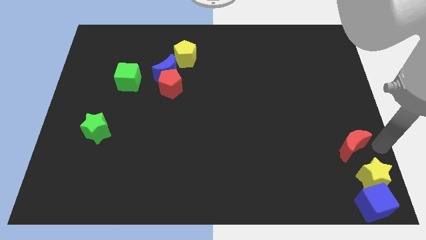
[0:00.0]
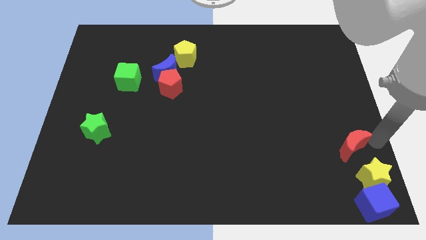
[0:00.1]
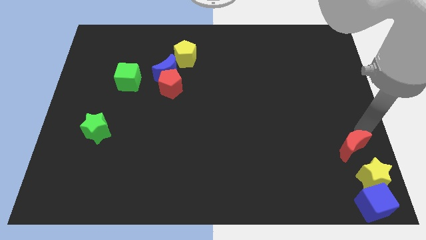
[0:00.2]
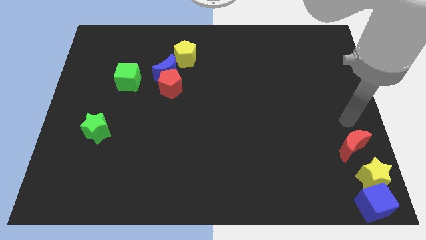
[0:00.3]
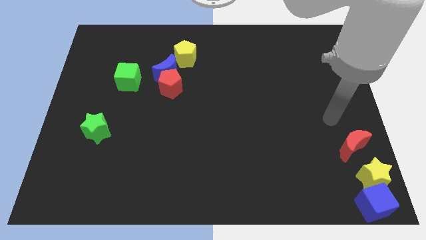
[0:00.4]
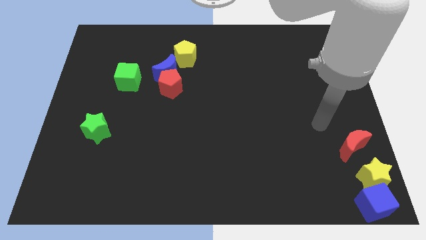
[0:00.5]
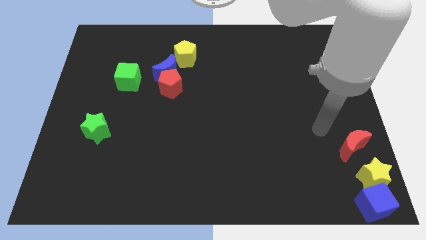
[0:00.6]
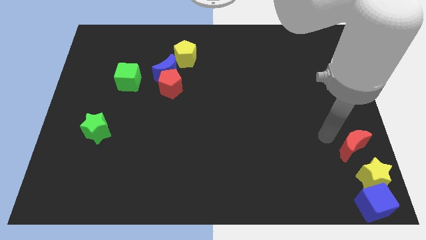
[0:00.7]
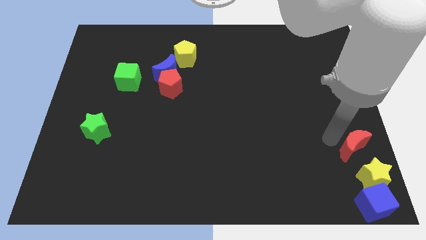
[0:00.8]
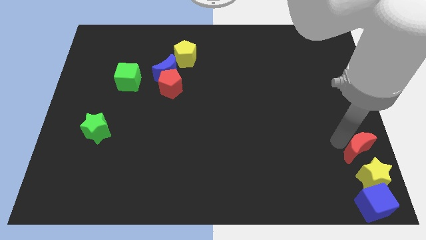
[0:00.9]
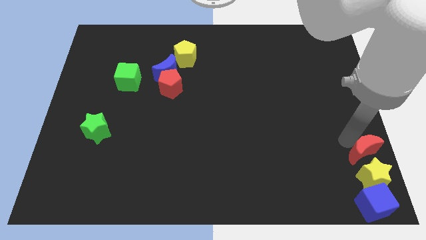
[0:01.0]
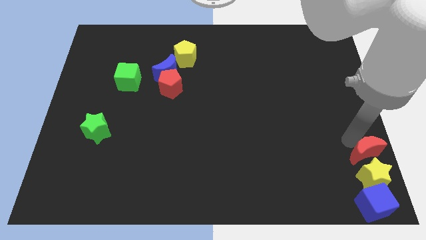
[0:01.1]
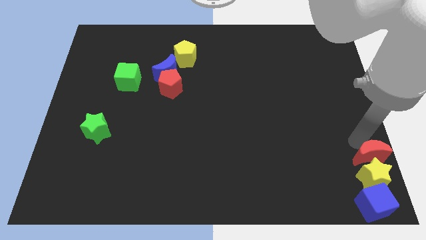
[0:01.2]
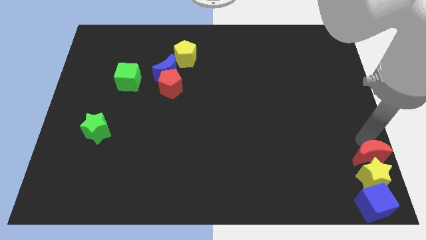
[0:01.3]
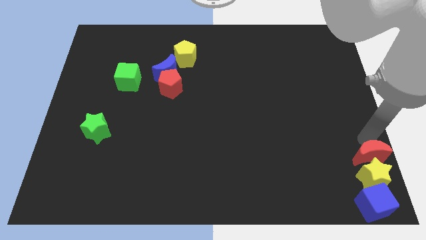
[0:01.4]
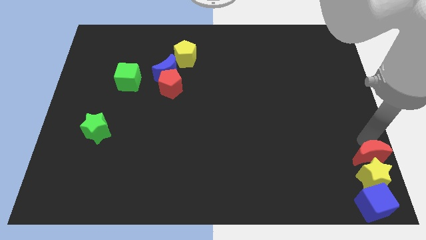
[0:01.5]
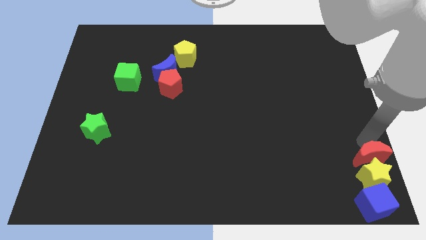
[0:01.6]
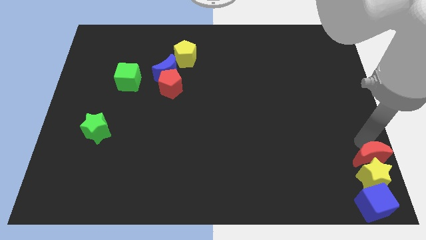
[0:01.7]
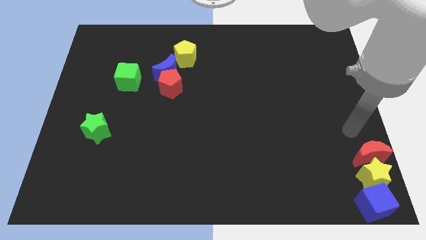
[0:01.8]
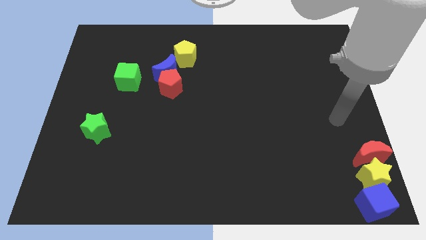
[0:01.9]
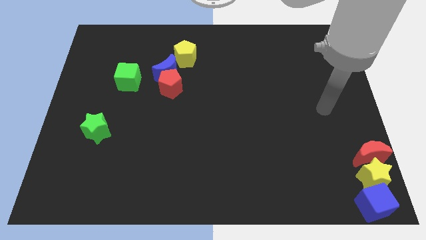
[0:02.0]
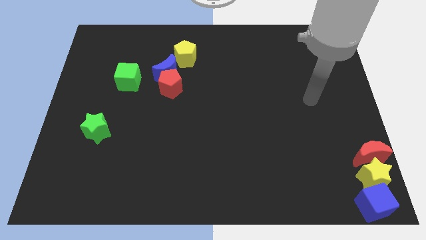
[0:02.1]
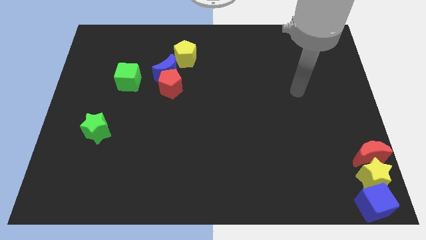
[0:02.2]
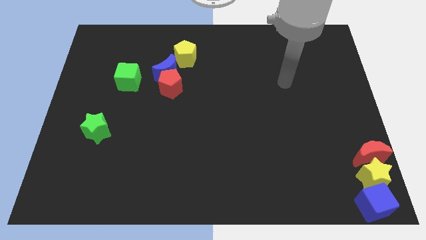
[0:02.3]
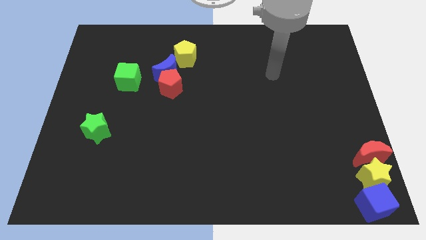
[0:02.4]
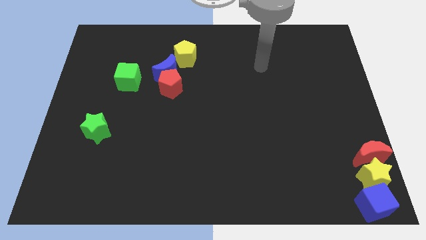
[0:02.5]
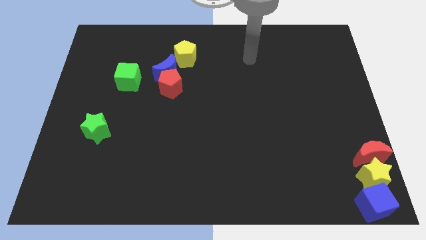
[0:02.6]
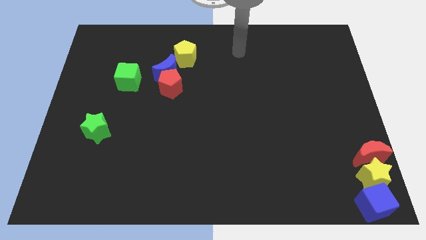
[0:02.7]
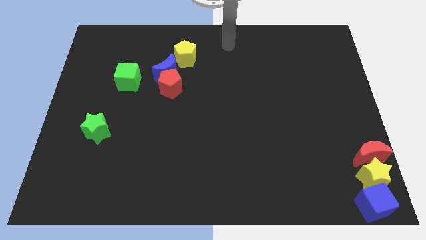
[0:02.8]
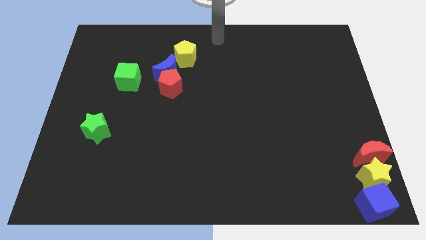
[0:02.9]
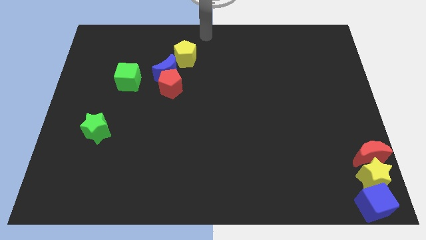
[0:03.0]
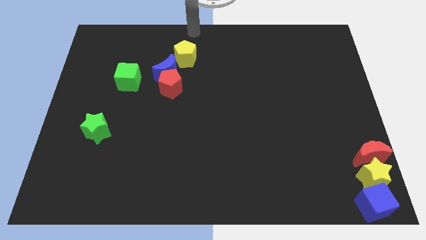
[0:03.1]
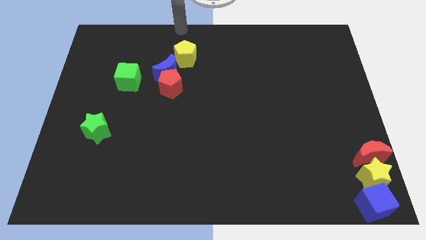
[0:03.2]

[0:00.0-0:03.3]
push the red crescent to the top side of the yellow star

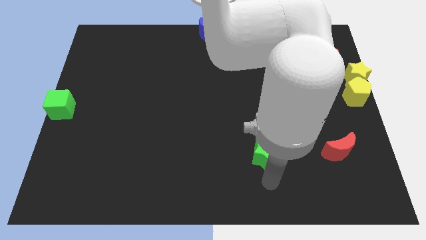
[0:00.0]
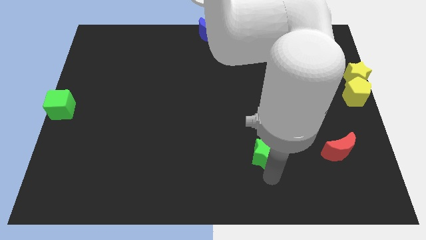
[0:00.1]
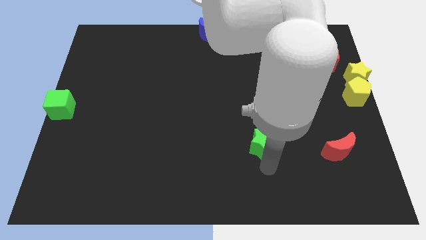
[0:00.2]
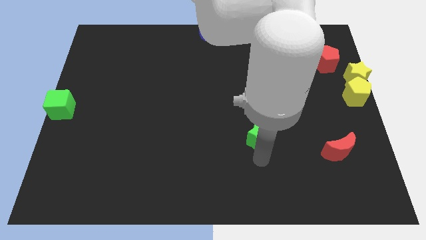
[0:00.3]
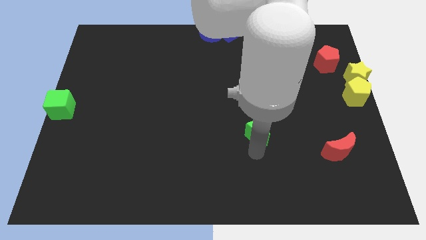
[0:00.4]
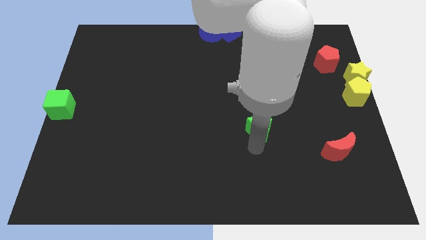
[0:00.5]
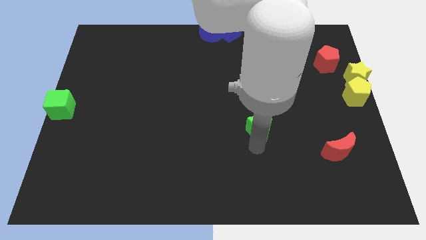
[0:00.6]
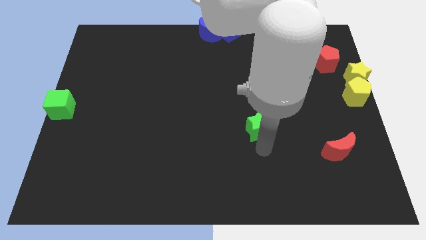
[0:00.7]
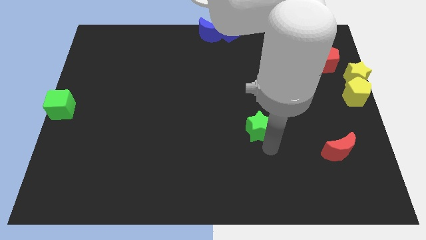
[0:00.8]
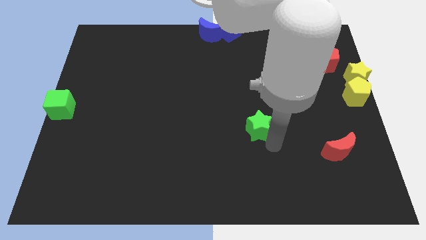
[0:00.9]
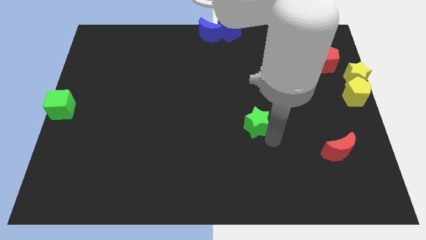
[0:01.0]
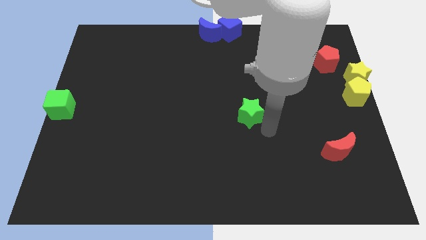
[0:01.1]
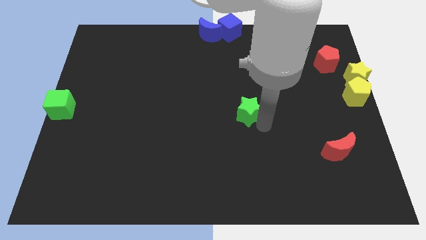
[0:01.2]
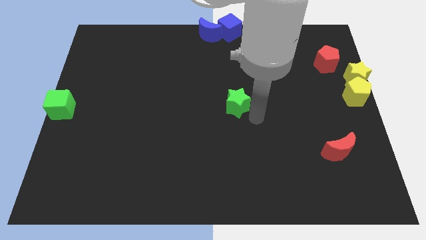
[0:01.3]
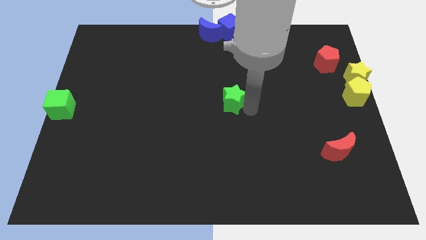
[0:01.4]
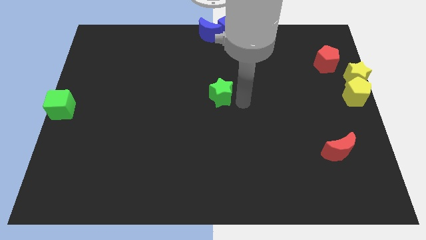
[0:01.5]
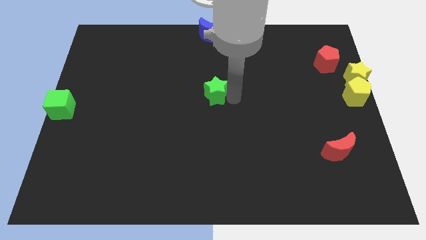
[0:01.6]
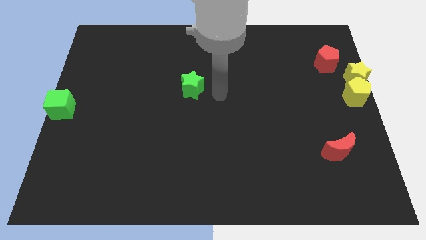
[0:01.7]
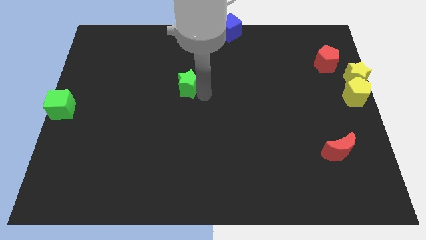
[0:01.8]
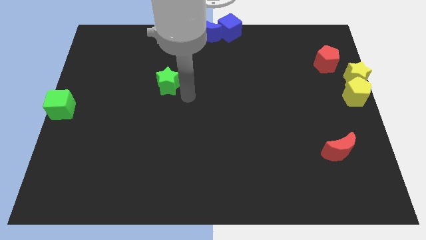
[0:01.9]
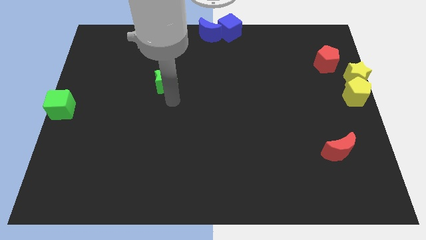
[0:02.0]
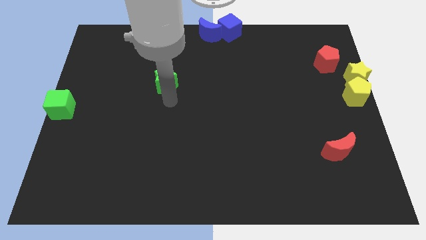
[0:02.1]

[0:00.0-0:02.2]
move the green star diagonally up

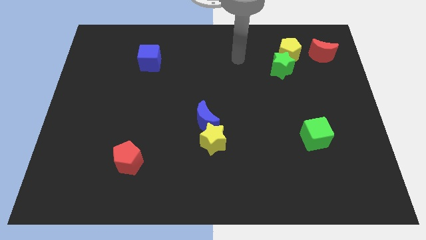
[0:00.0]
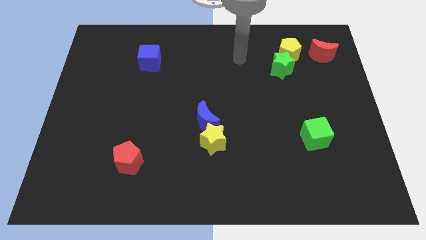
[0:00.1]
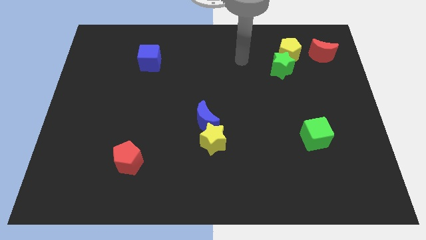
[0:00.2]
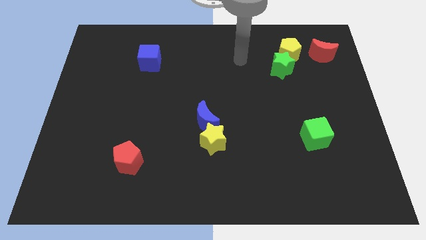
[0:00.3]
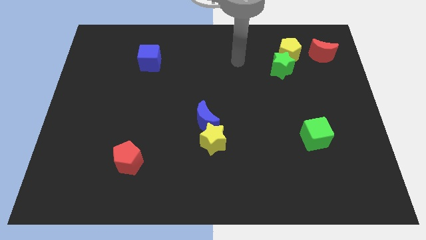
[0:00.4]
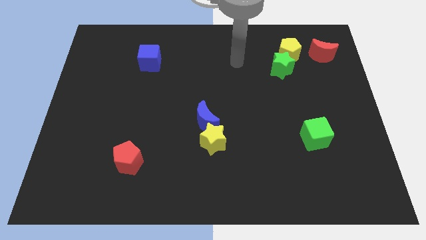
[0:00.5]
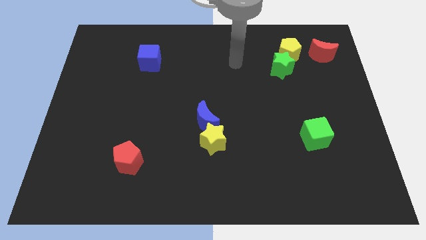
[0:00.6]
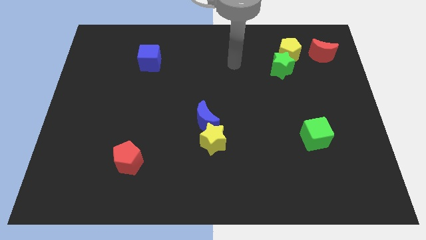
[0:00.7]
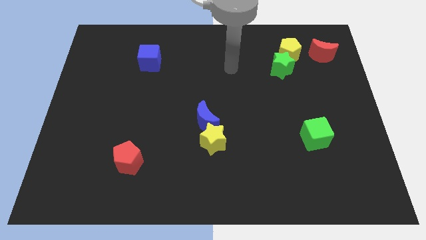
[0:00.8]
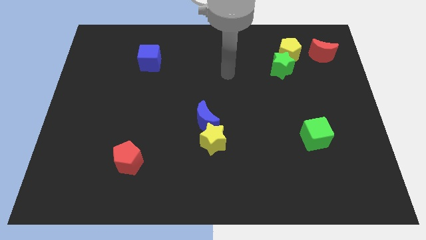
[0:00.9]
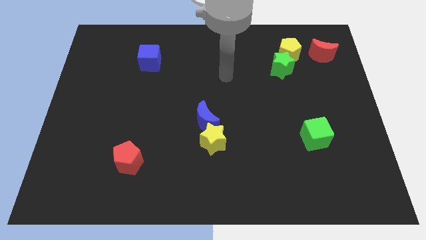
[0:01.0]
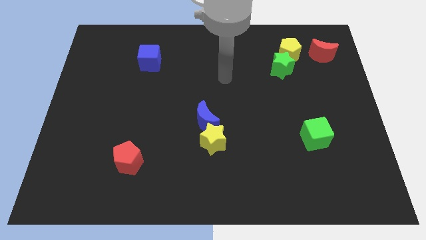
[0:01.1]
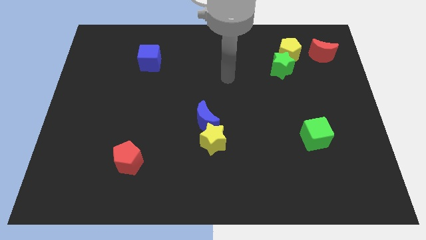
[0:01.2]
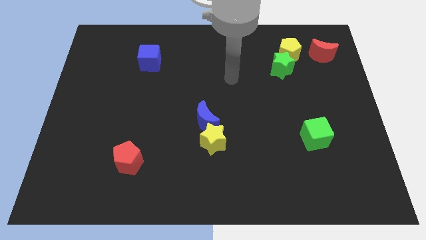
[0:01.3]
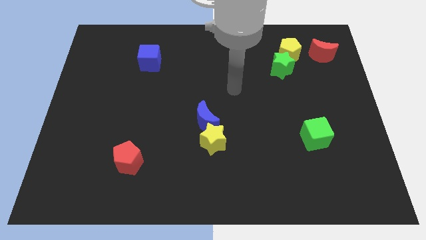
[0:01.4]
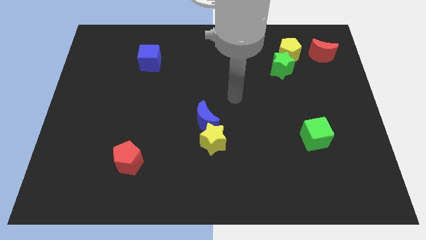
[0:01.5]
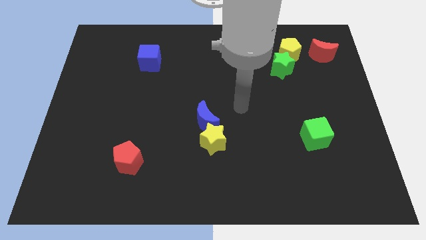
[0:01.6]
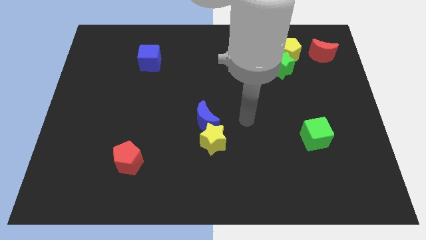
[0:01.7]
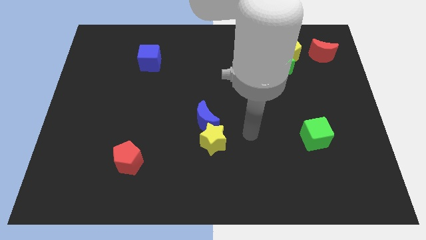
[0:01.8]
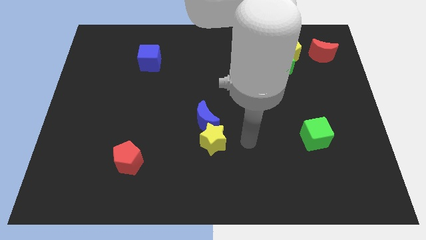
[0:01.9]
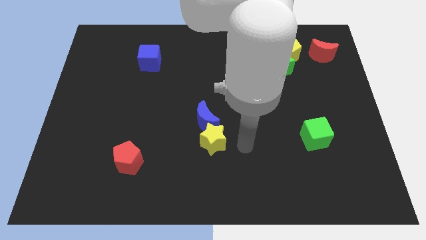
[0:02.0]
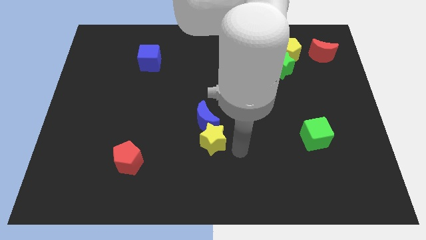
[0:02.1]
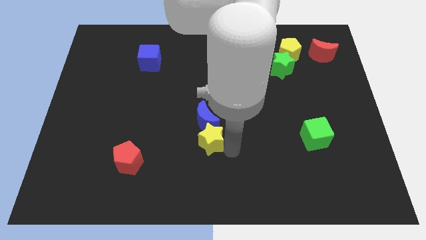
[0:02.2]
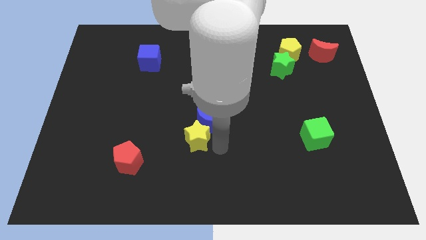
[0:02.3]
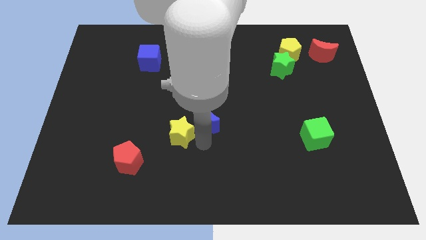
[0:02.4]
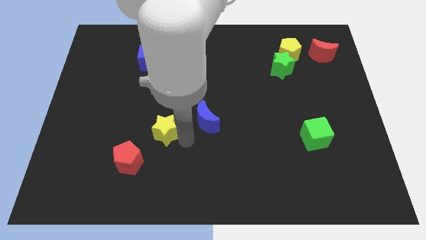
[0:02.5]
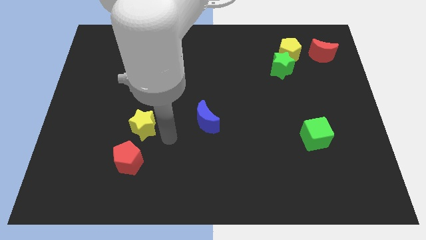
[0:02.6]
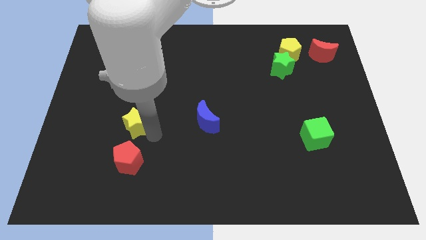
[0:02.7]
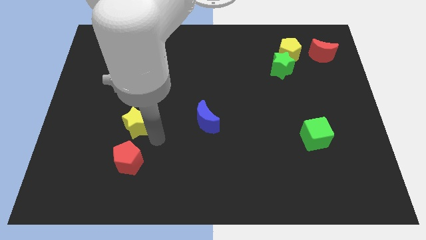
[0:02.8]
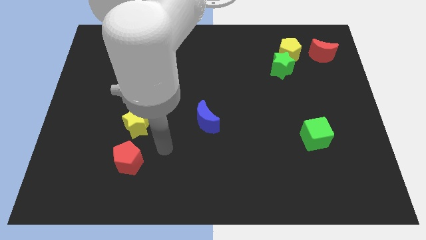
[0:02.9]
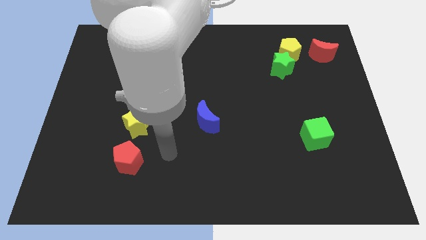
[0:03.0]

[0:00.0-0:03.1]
place the yellow star at the top side of the red pentagon

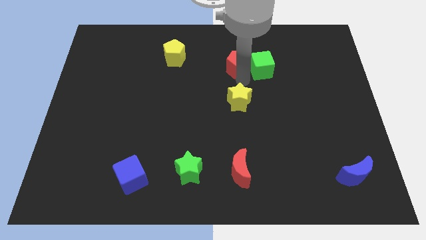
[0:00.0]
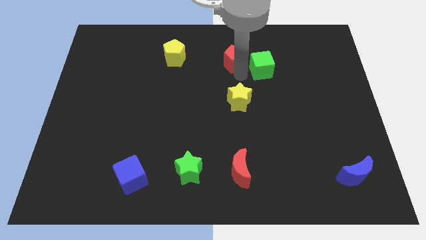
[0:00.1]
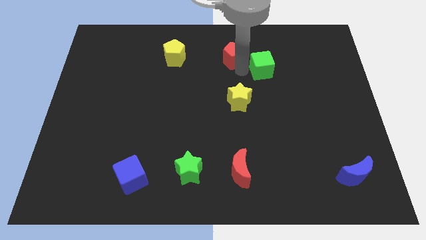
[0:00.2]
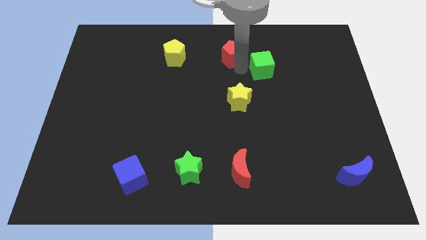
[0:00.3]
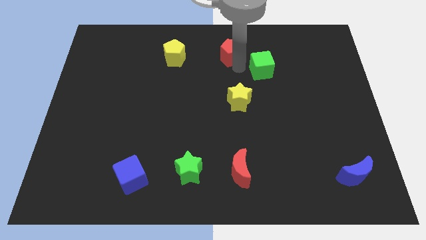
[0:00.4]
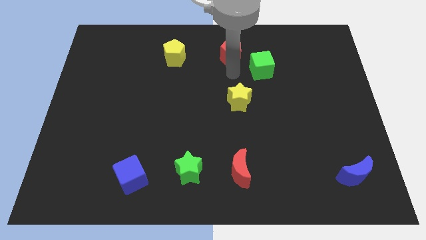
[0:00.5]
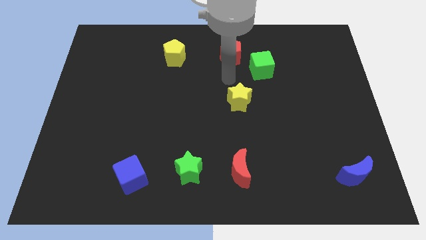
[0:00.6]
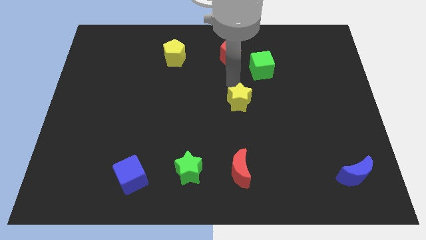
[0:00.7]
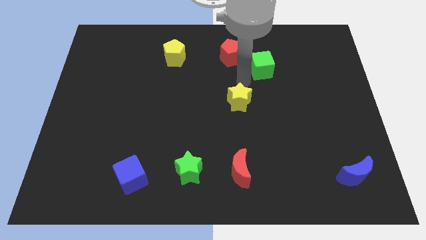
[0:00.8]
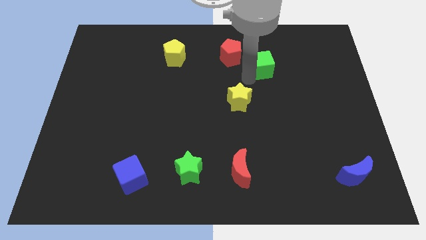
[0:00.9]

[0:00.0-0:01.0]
slightly push the red pentagon upward
